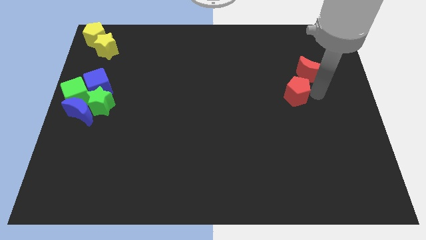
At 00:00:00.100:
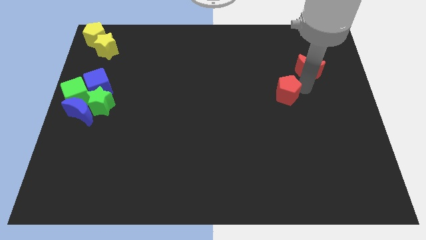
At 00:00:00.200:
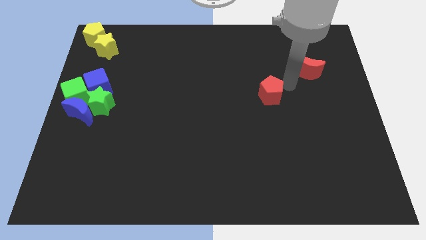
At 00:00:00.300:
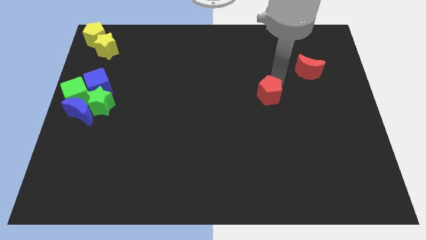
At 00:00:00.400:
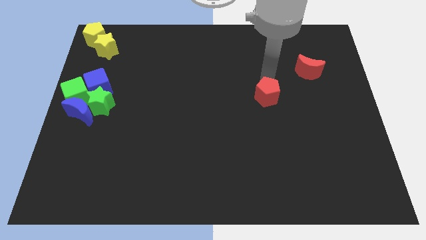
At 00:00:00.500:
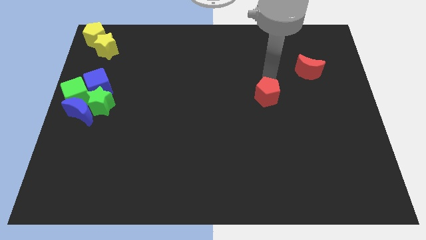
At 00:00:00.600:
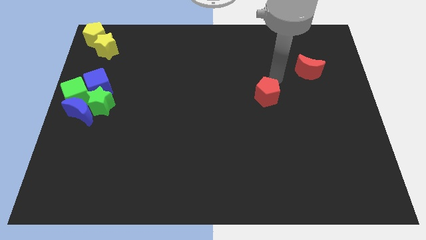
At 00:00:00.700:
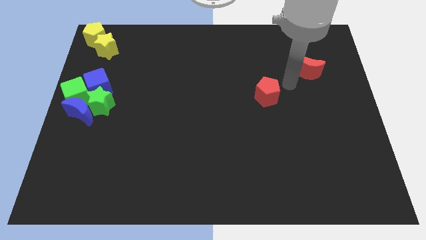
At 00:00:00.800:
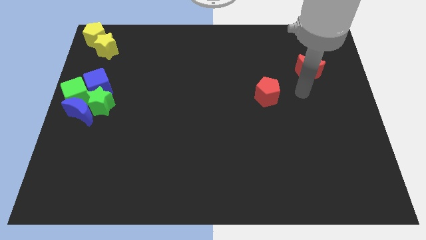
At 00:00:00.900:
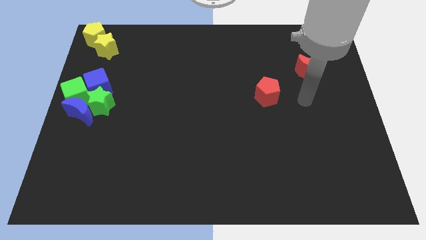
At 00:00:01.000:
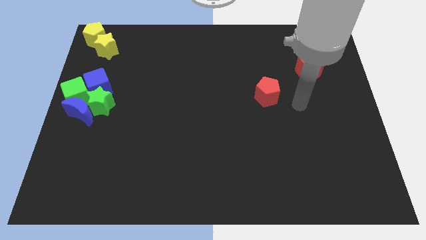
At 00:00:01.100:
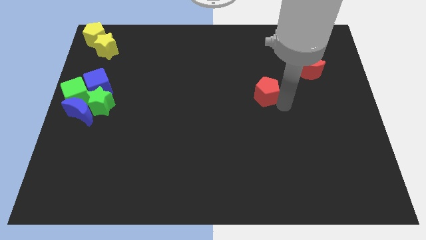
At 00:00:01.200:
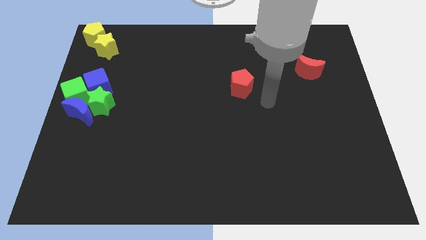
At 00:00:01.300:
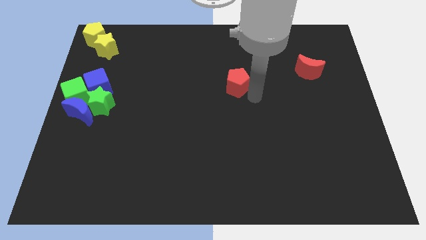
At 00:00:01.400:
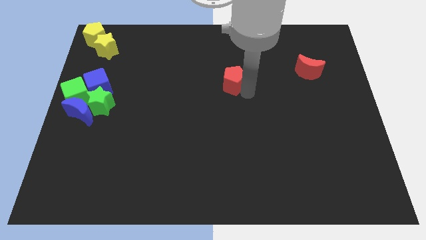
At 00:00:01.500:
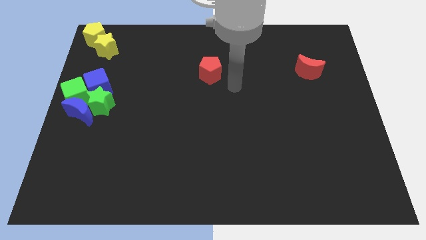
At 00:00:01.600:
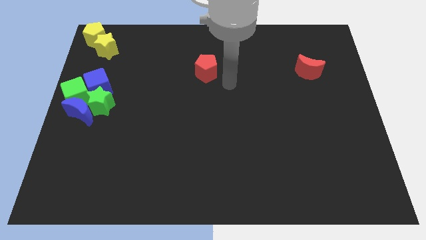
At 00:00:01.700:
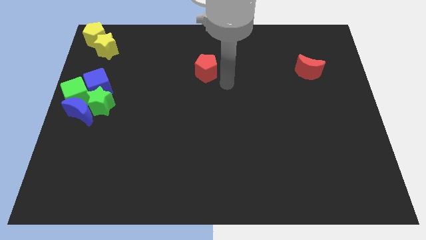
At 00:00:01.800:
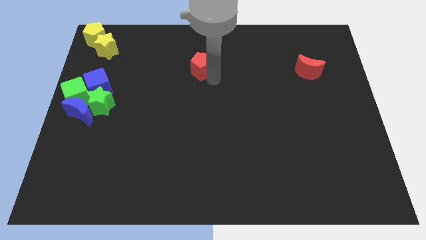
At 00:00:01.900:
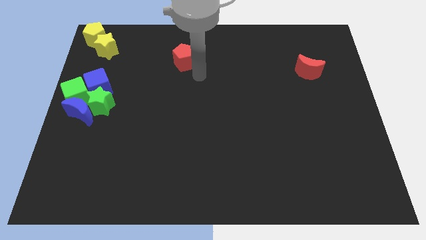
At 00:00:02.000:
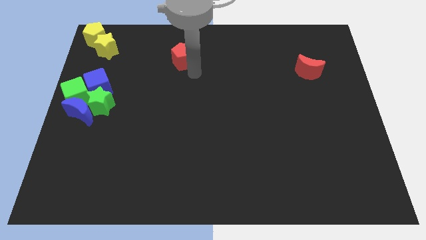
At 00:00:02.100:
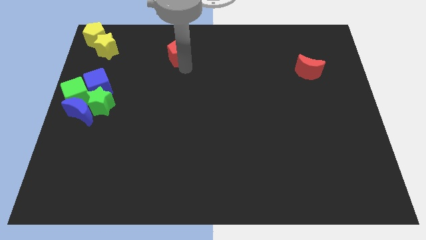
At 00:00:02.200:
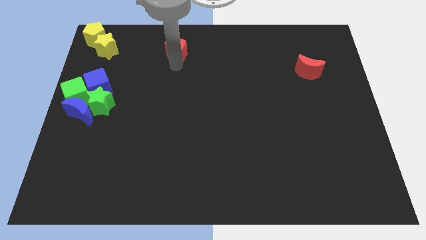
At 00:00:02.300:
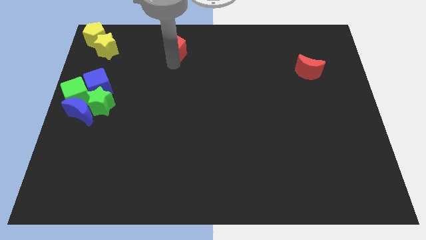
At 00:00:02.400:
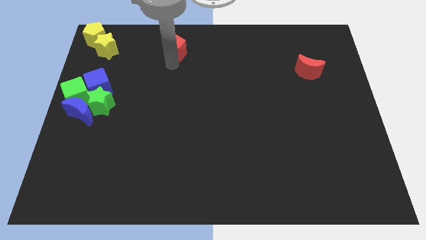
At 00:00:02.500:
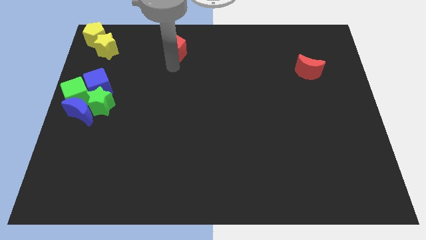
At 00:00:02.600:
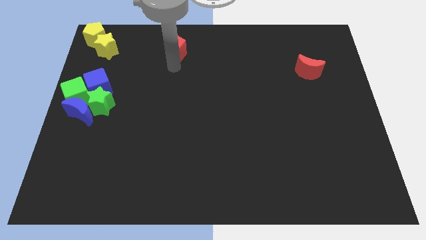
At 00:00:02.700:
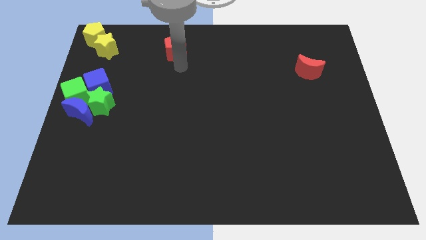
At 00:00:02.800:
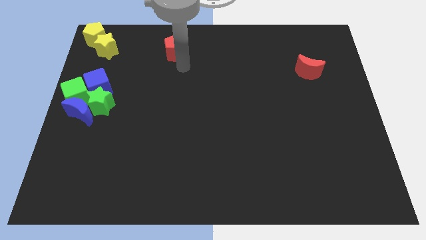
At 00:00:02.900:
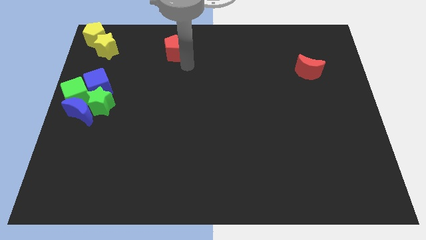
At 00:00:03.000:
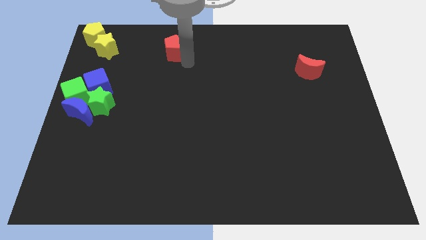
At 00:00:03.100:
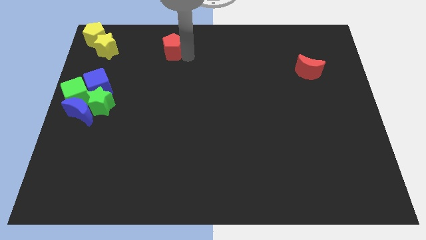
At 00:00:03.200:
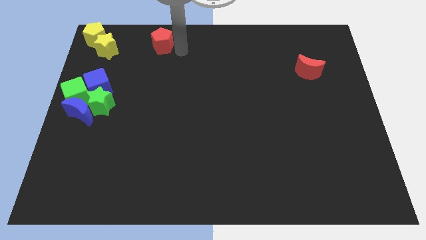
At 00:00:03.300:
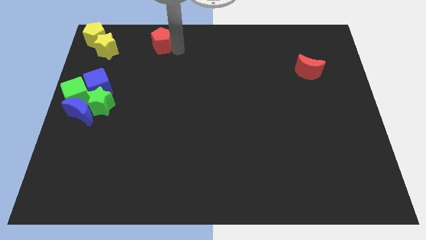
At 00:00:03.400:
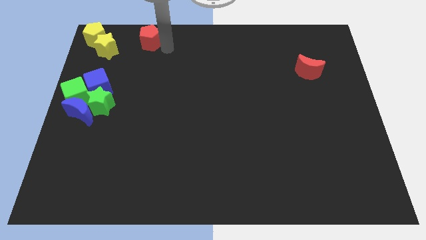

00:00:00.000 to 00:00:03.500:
separate red pentagon from red moon

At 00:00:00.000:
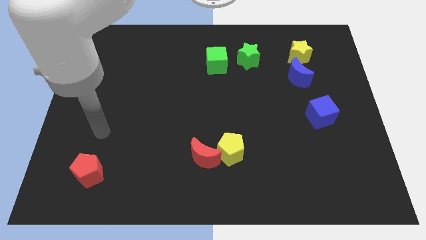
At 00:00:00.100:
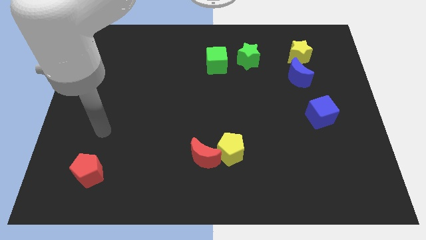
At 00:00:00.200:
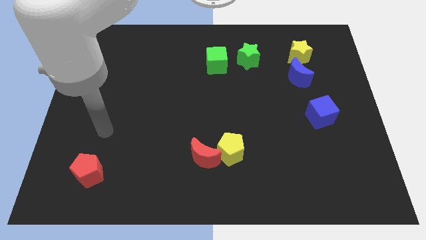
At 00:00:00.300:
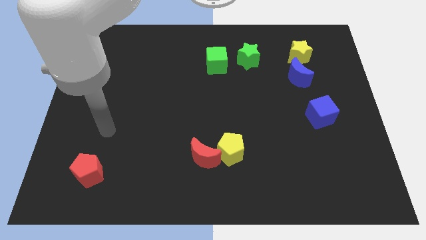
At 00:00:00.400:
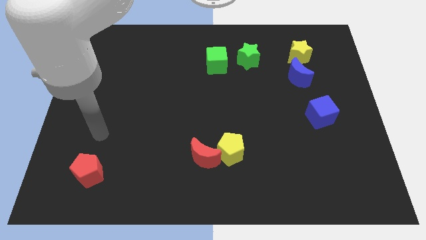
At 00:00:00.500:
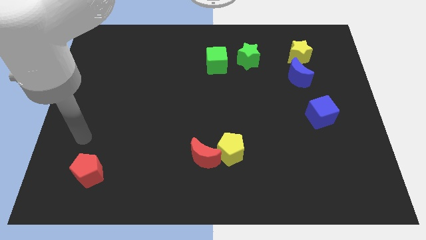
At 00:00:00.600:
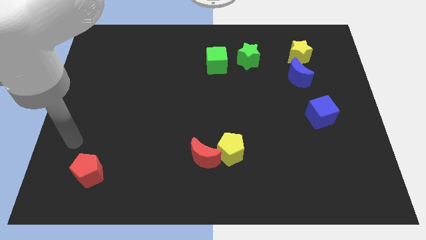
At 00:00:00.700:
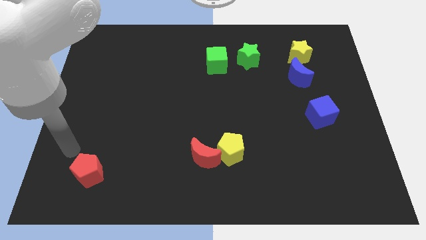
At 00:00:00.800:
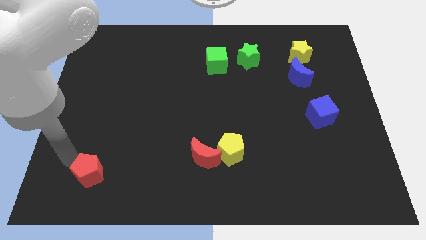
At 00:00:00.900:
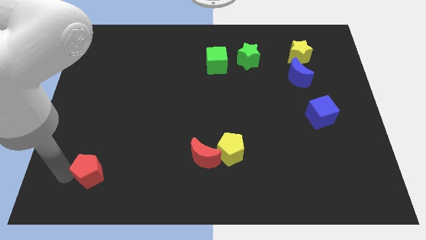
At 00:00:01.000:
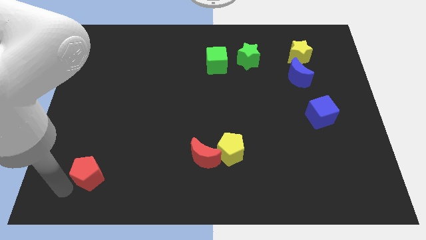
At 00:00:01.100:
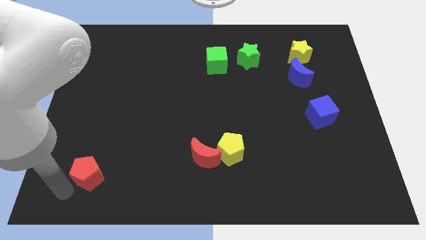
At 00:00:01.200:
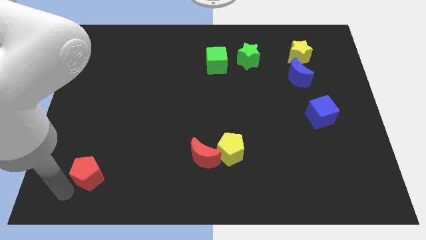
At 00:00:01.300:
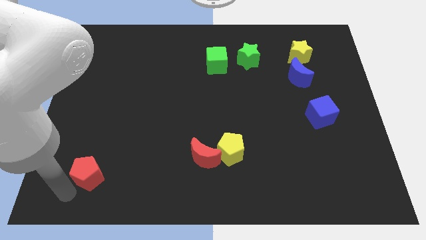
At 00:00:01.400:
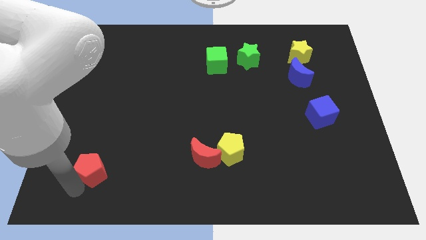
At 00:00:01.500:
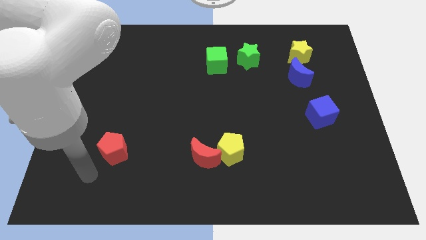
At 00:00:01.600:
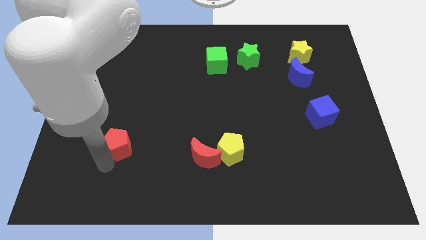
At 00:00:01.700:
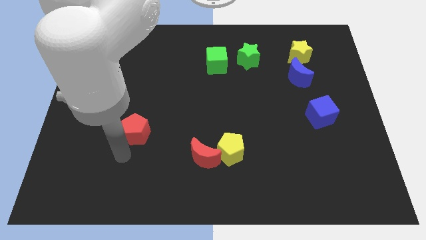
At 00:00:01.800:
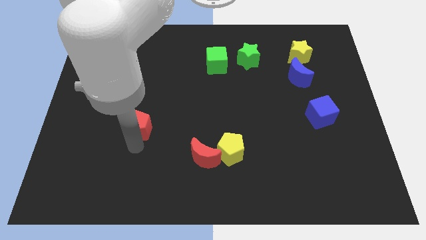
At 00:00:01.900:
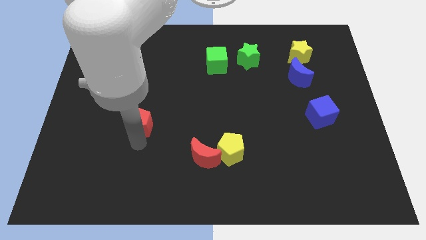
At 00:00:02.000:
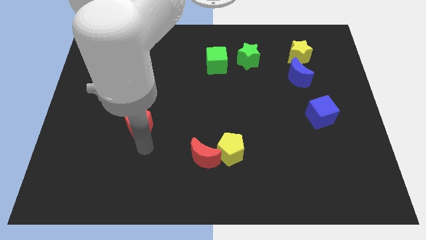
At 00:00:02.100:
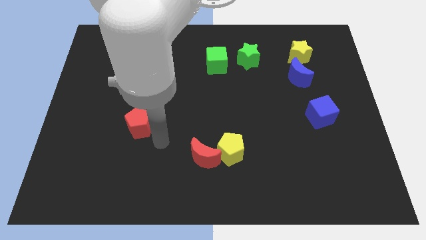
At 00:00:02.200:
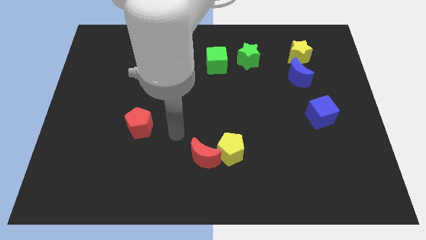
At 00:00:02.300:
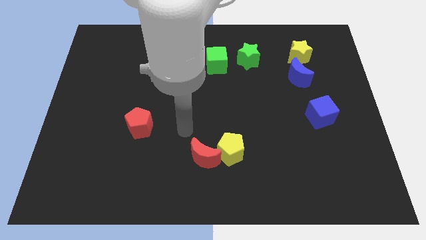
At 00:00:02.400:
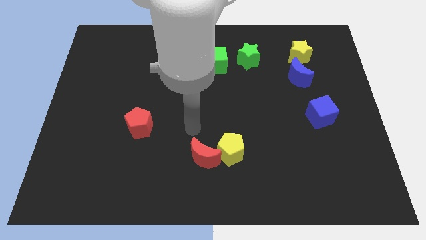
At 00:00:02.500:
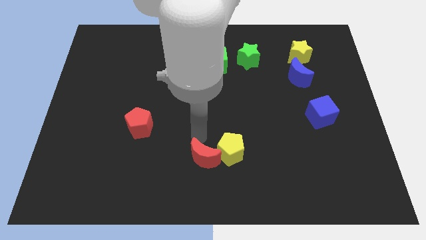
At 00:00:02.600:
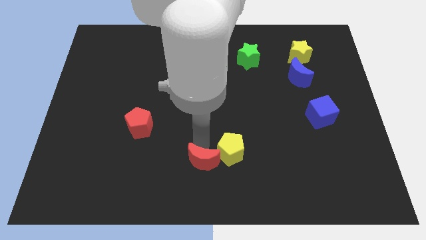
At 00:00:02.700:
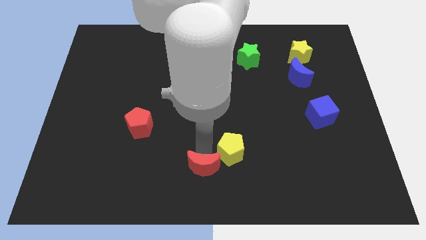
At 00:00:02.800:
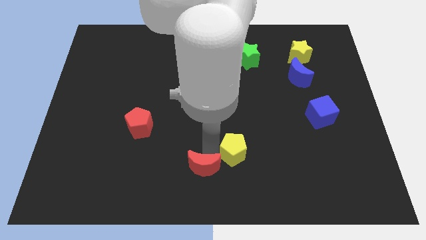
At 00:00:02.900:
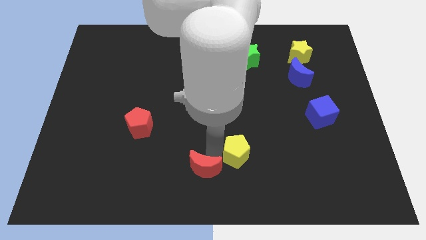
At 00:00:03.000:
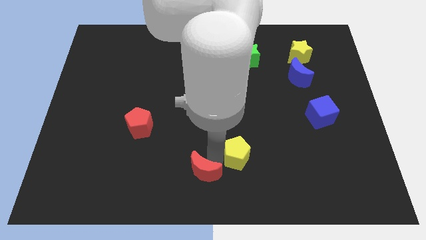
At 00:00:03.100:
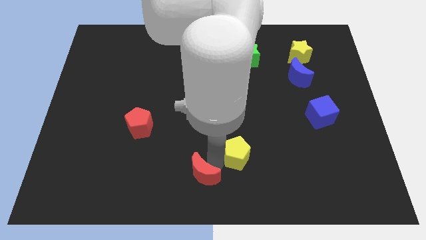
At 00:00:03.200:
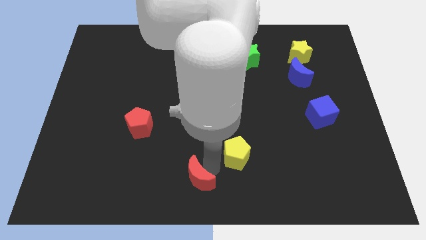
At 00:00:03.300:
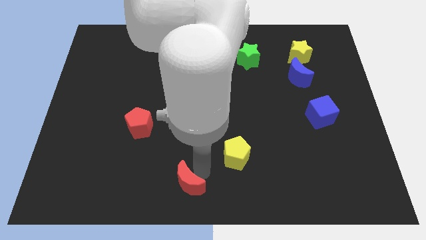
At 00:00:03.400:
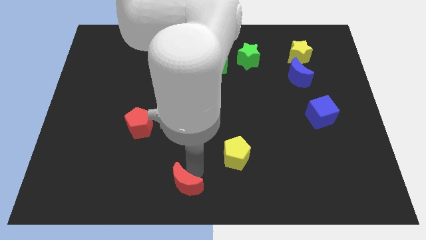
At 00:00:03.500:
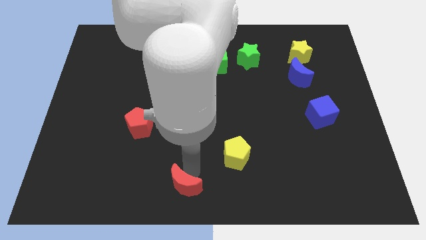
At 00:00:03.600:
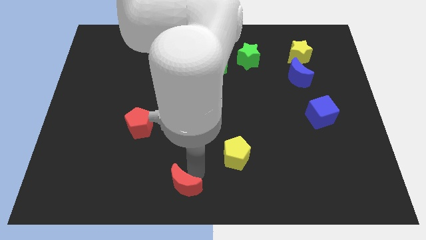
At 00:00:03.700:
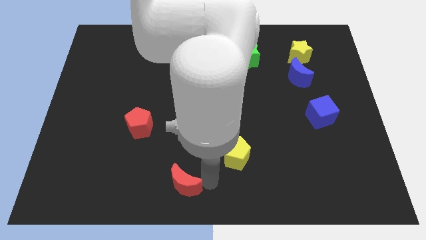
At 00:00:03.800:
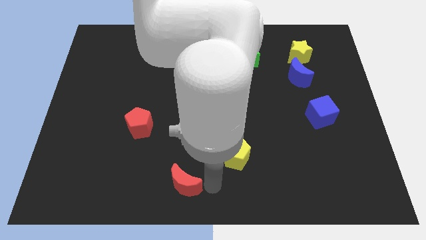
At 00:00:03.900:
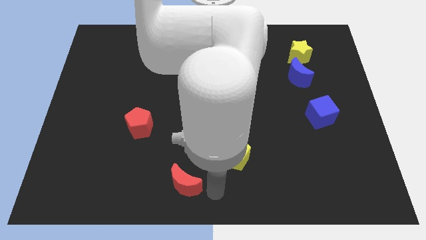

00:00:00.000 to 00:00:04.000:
place the red pentagon diagonally to red moon

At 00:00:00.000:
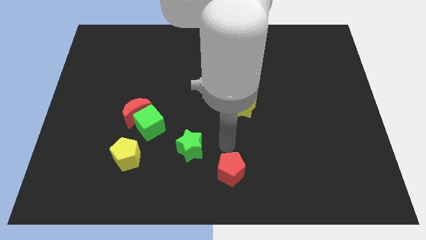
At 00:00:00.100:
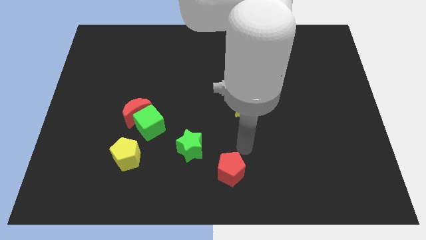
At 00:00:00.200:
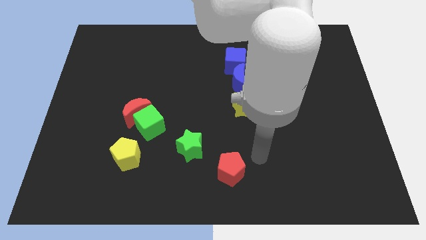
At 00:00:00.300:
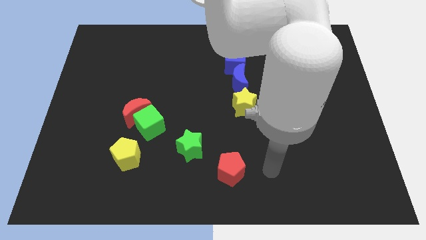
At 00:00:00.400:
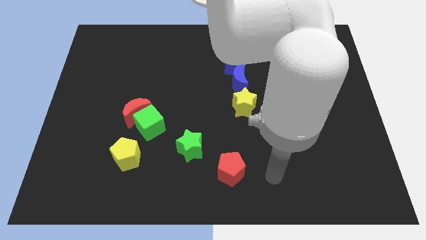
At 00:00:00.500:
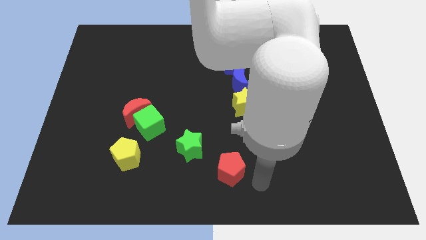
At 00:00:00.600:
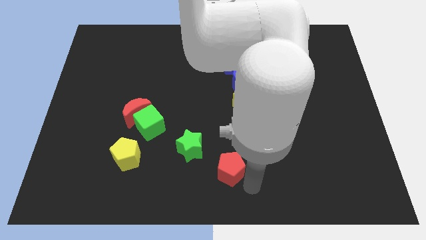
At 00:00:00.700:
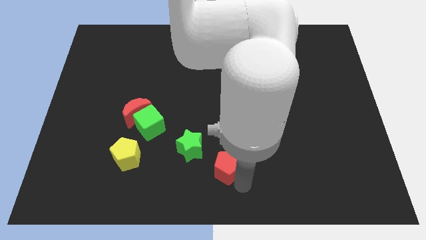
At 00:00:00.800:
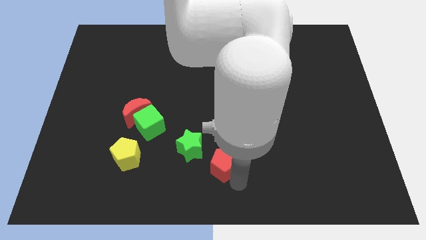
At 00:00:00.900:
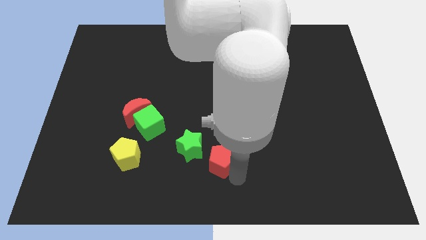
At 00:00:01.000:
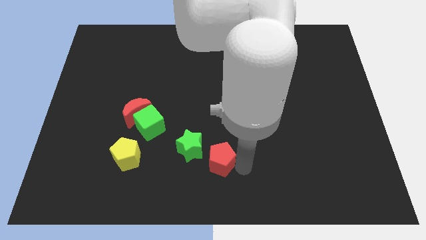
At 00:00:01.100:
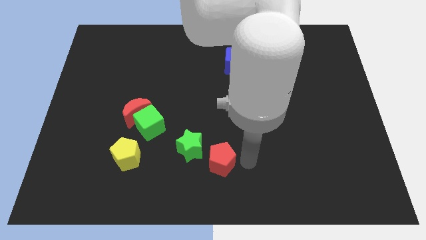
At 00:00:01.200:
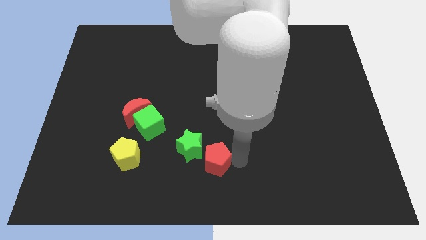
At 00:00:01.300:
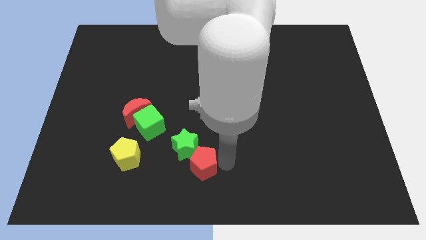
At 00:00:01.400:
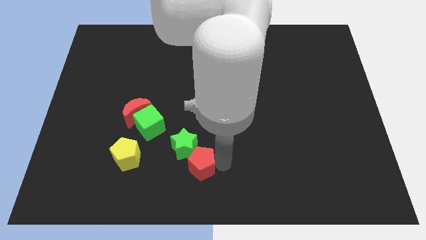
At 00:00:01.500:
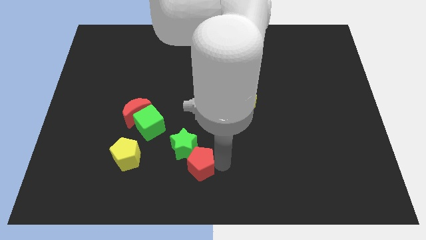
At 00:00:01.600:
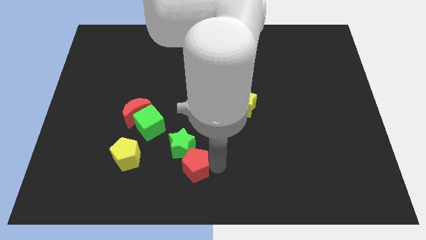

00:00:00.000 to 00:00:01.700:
move the red pentagon into the green star
